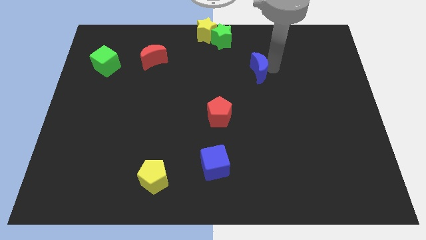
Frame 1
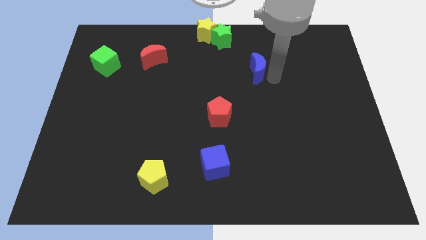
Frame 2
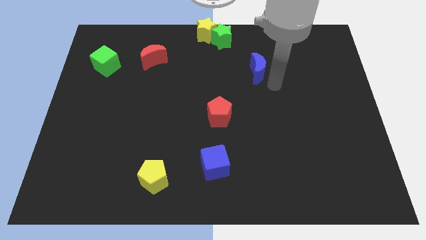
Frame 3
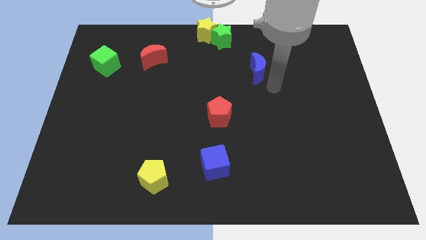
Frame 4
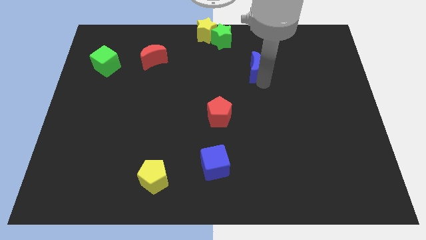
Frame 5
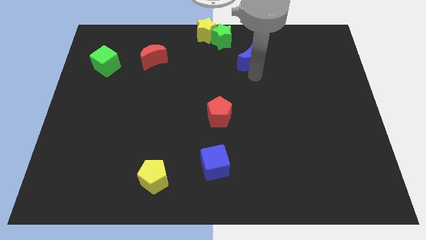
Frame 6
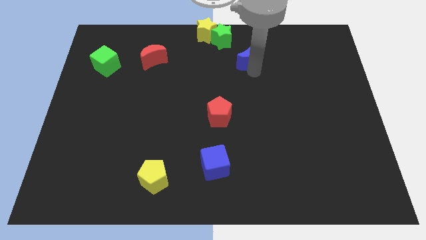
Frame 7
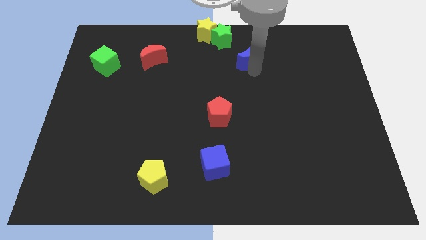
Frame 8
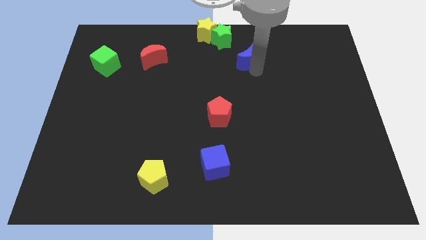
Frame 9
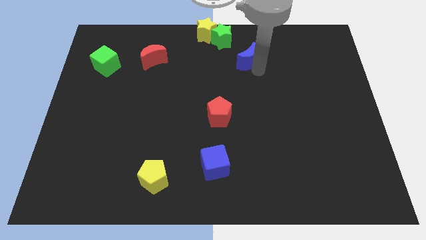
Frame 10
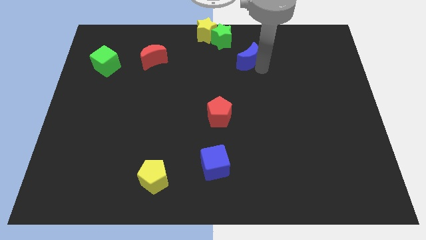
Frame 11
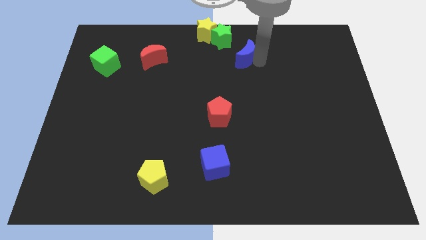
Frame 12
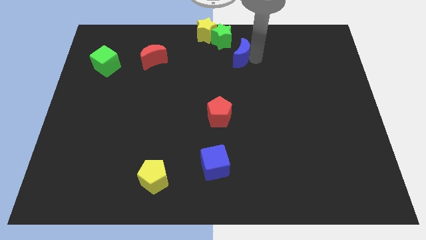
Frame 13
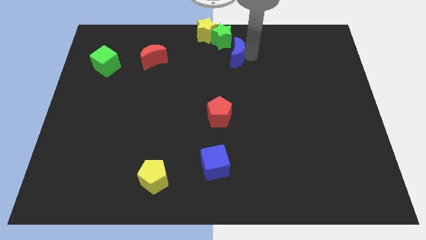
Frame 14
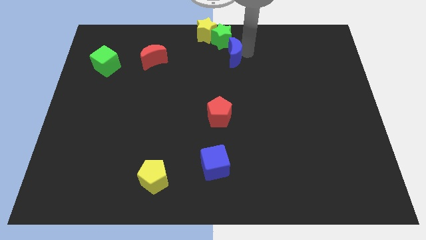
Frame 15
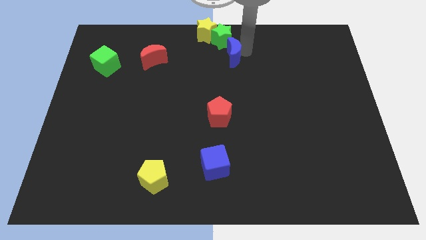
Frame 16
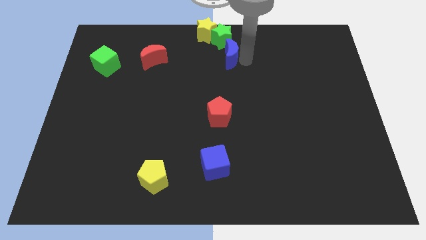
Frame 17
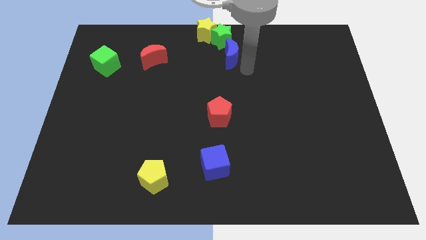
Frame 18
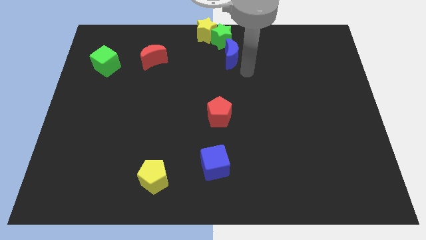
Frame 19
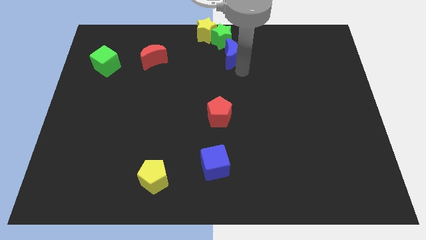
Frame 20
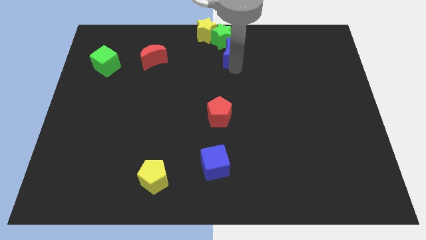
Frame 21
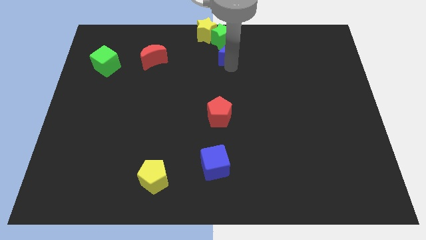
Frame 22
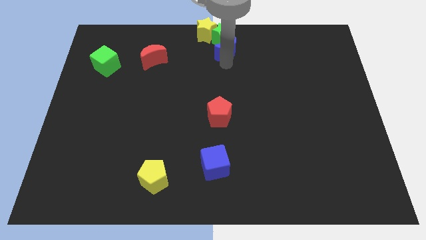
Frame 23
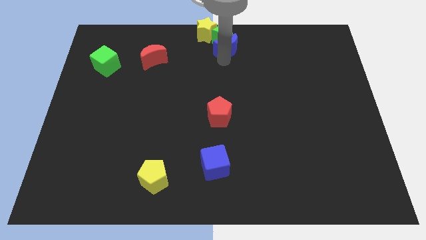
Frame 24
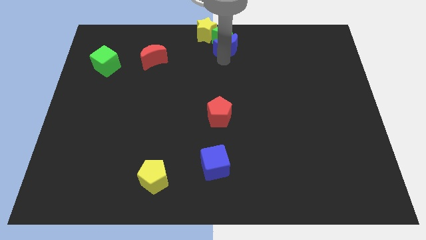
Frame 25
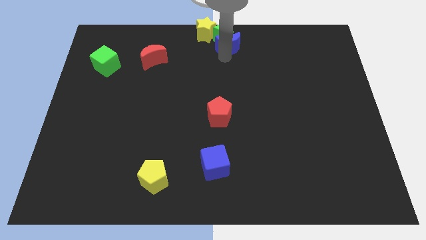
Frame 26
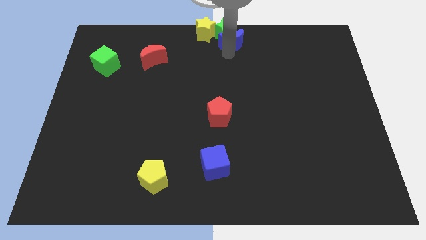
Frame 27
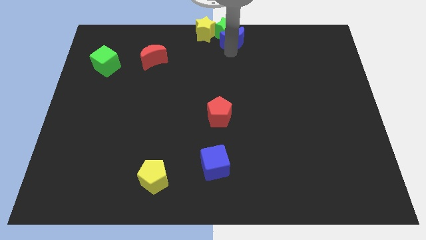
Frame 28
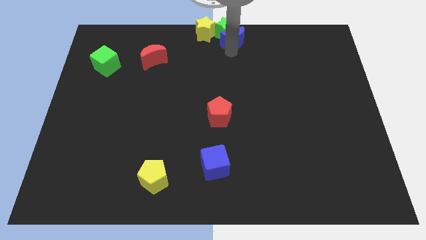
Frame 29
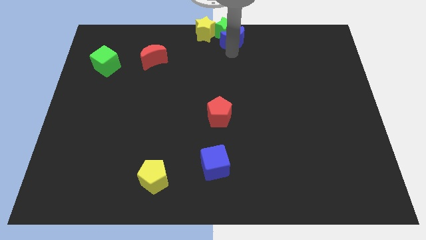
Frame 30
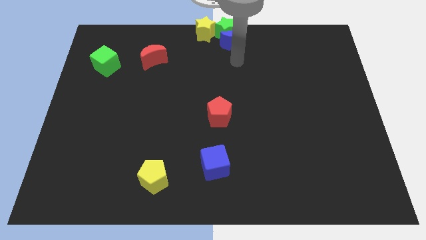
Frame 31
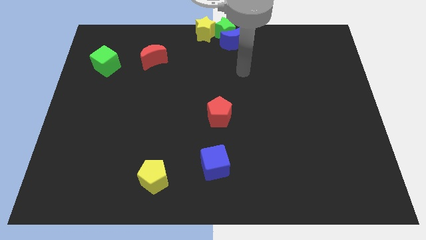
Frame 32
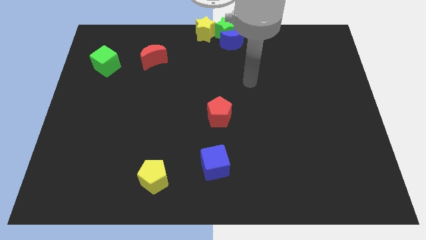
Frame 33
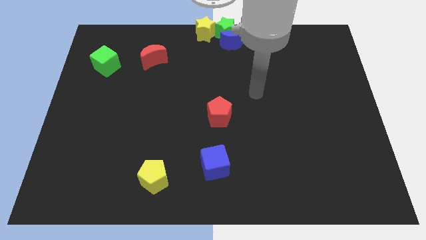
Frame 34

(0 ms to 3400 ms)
move the blue moon into the green star

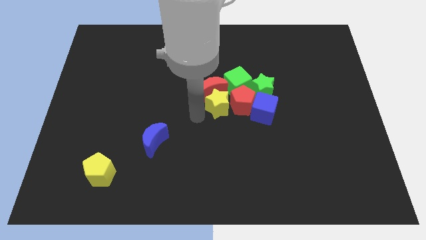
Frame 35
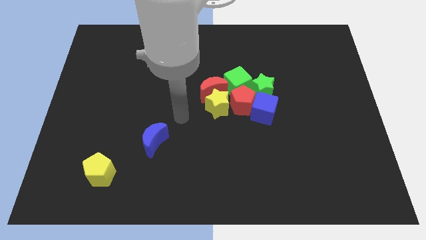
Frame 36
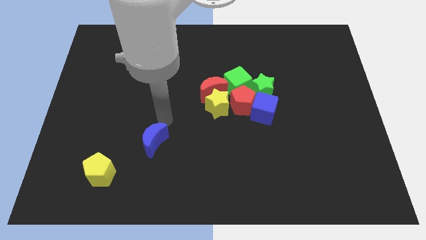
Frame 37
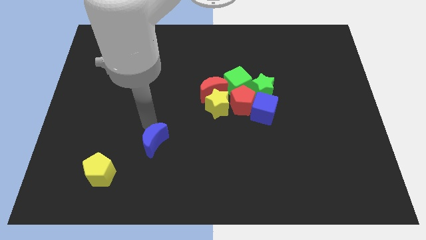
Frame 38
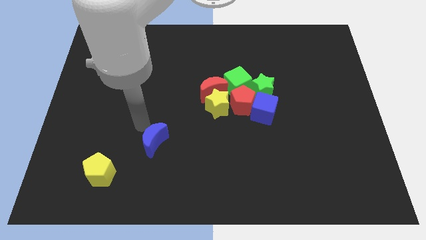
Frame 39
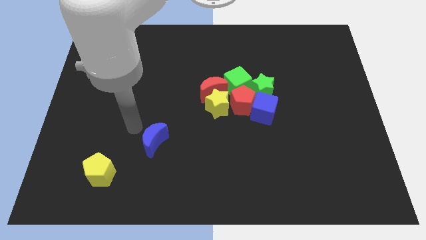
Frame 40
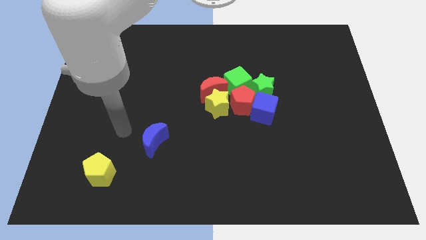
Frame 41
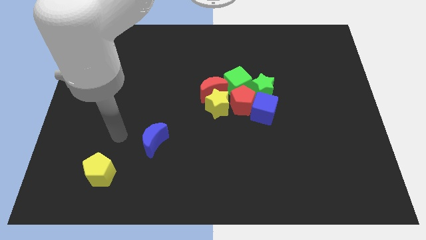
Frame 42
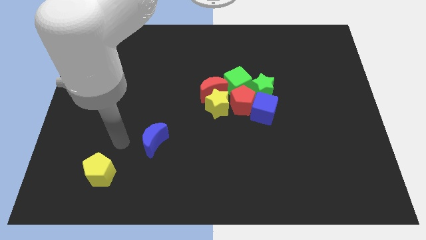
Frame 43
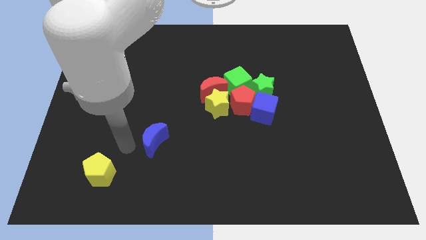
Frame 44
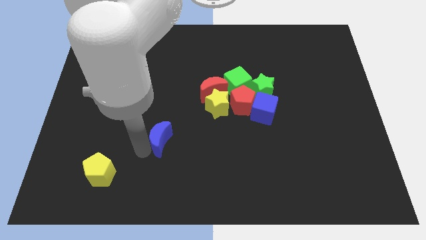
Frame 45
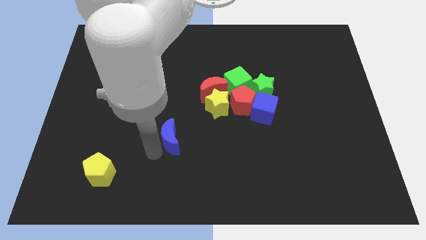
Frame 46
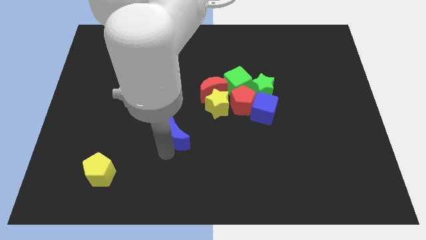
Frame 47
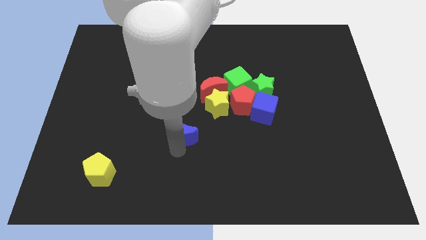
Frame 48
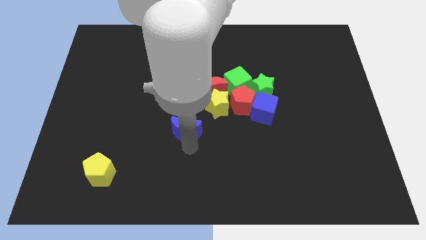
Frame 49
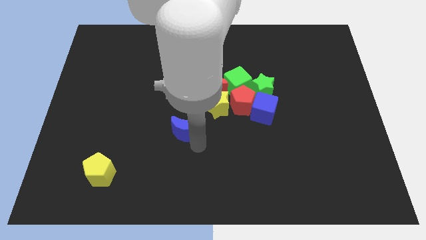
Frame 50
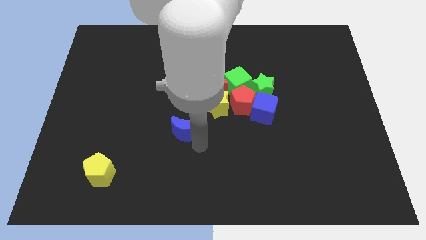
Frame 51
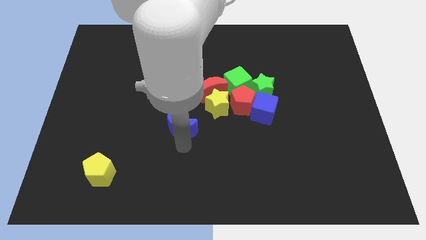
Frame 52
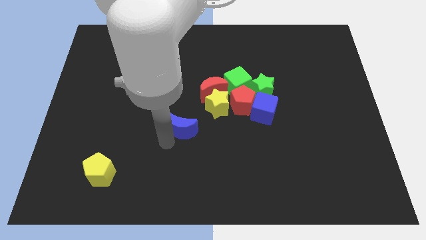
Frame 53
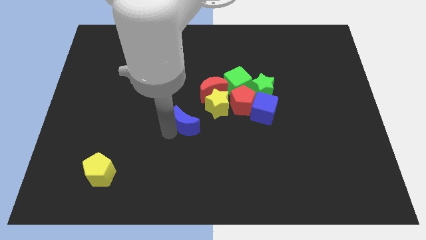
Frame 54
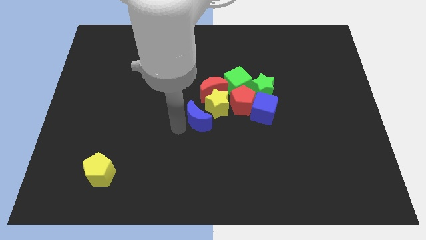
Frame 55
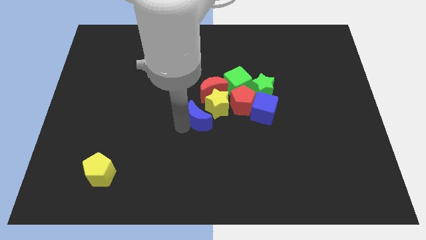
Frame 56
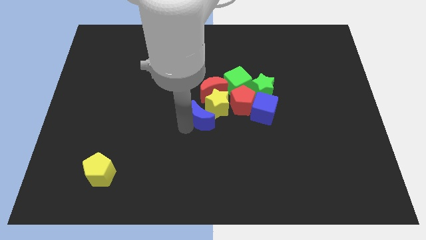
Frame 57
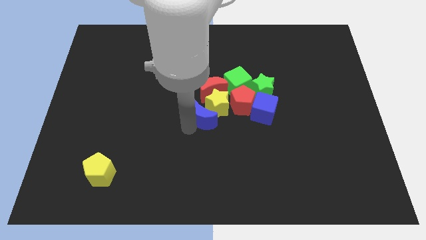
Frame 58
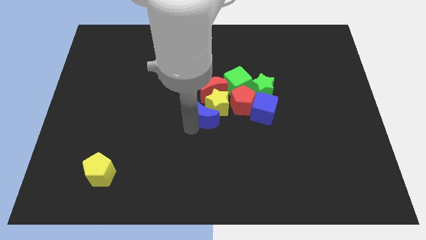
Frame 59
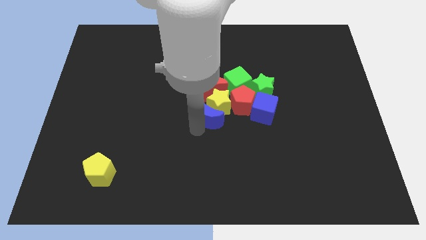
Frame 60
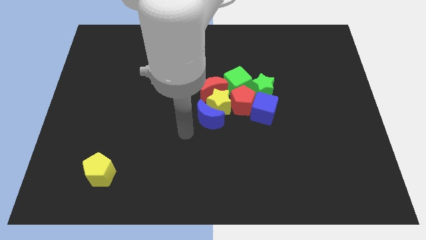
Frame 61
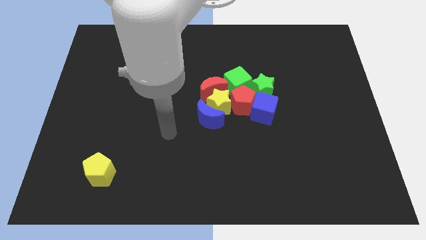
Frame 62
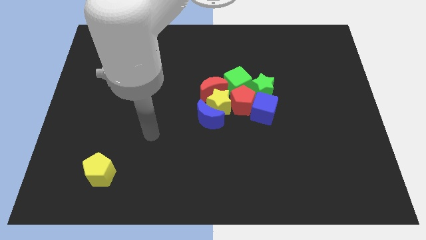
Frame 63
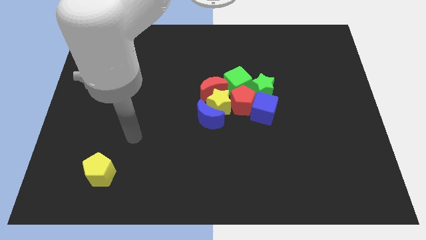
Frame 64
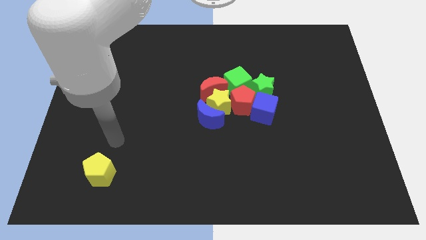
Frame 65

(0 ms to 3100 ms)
move the blue crescent into the bottom left side of the yellow star

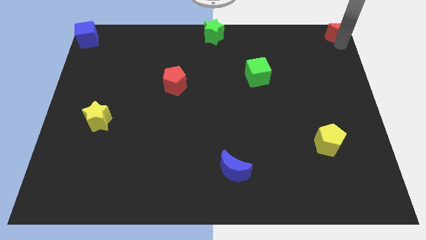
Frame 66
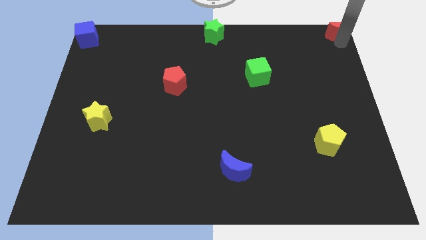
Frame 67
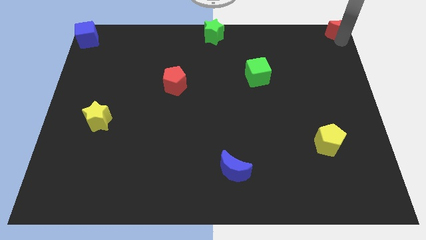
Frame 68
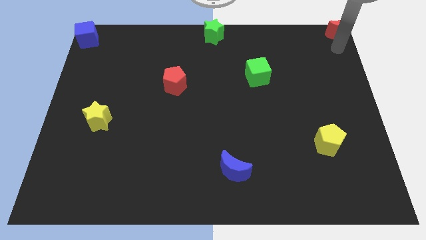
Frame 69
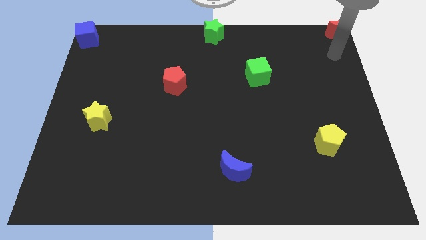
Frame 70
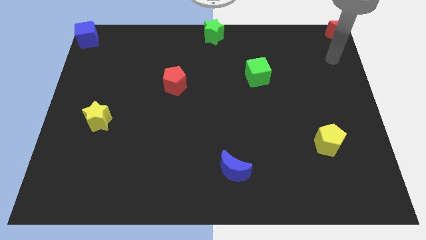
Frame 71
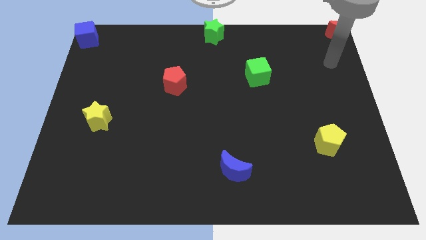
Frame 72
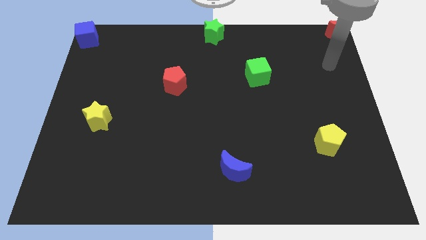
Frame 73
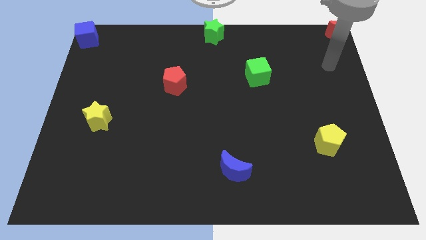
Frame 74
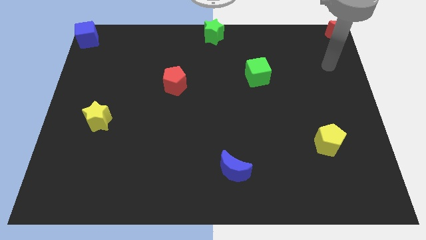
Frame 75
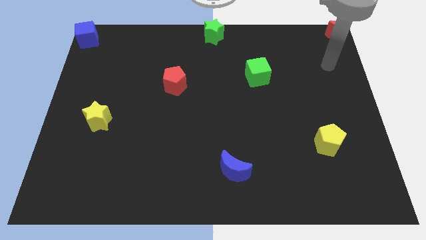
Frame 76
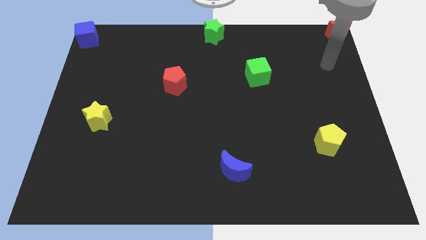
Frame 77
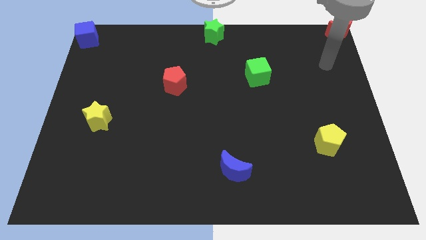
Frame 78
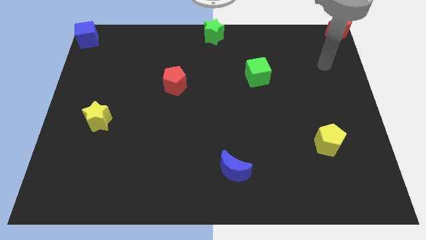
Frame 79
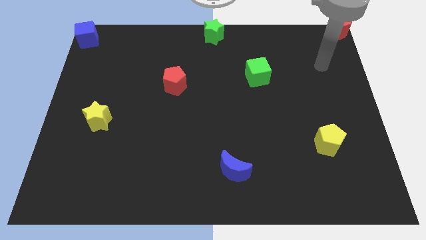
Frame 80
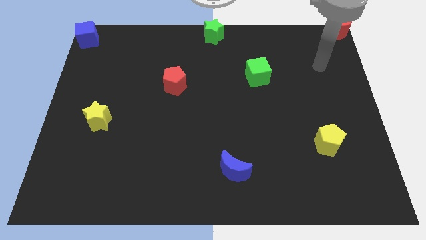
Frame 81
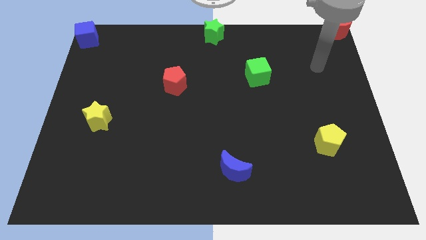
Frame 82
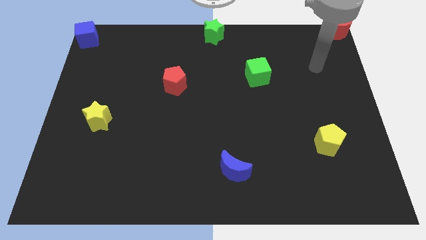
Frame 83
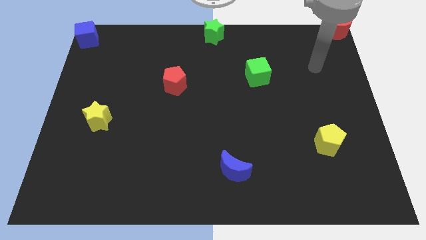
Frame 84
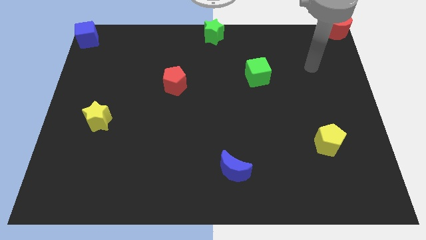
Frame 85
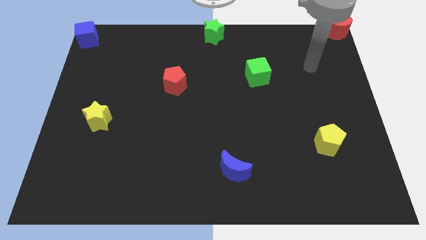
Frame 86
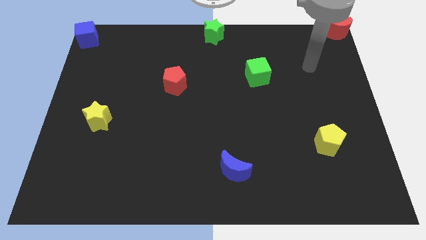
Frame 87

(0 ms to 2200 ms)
move the arm away from the red moon

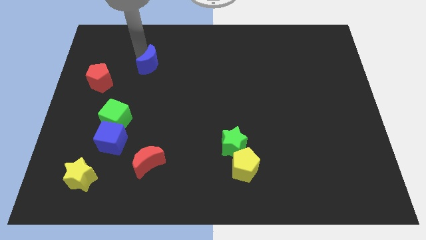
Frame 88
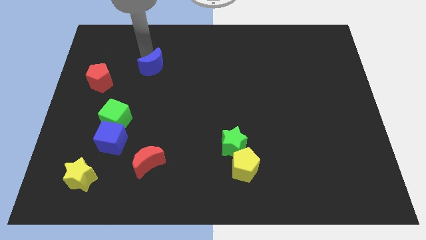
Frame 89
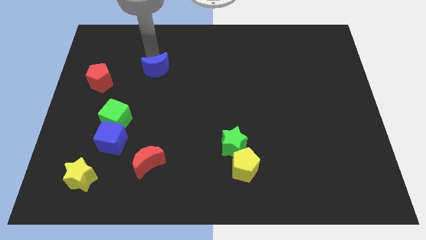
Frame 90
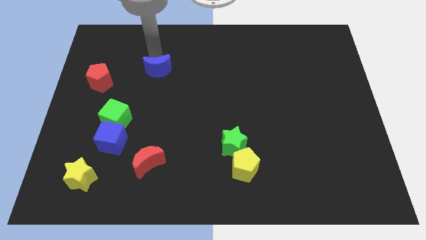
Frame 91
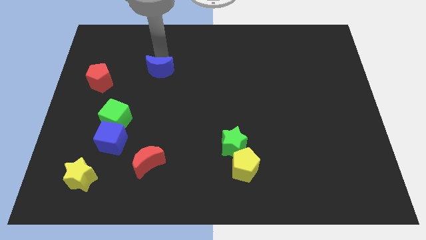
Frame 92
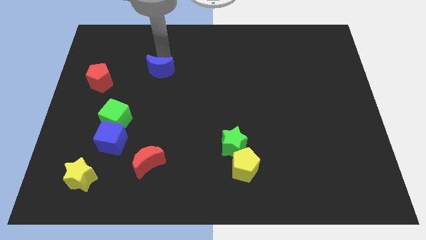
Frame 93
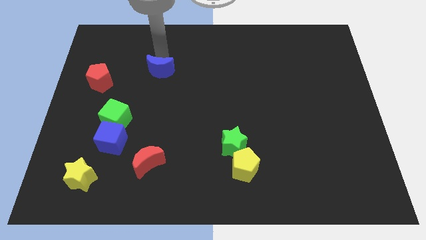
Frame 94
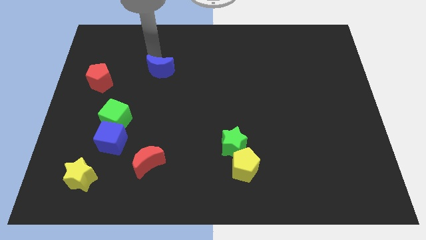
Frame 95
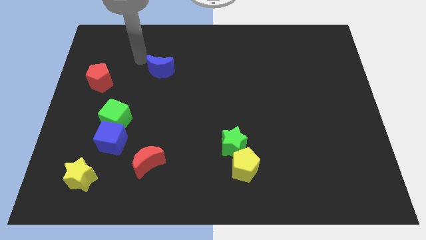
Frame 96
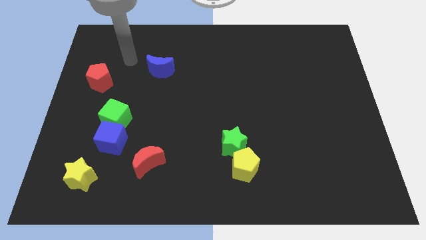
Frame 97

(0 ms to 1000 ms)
push blue crescent slightly down
